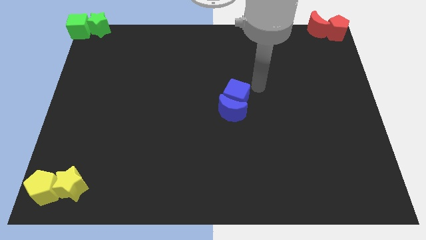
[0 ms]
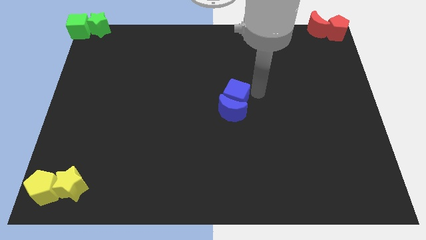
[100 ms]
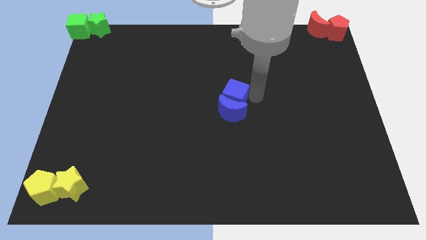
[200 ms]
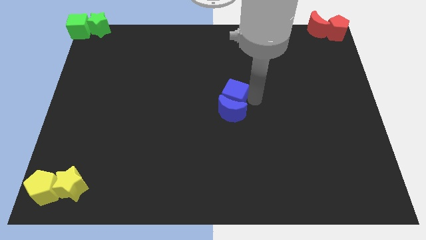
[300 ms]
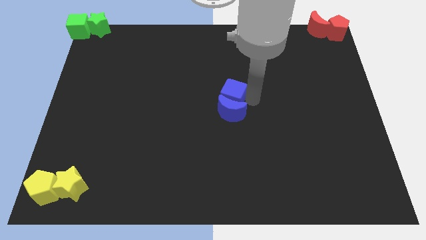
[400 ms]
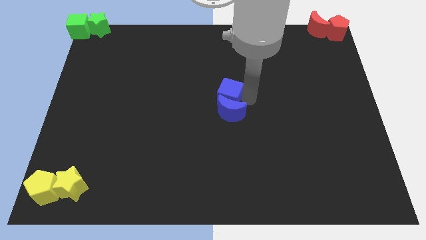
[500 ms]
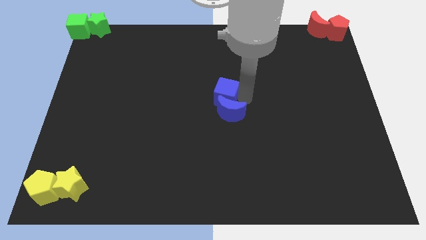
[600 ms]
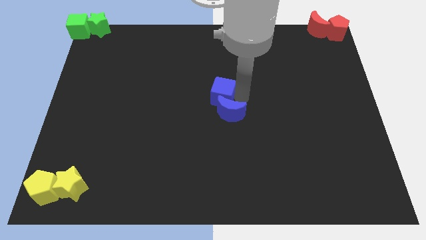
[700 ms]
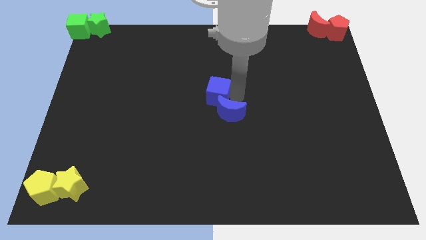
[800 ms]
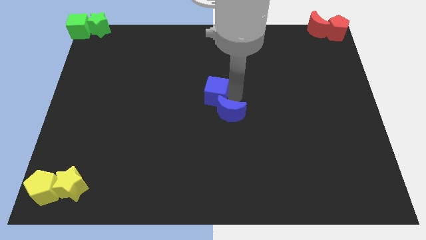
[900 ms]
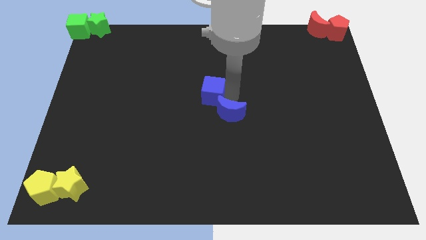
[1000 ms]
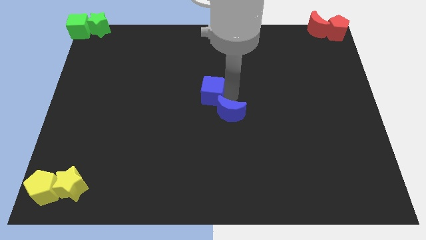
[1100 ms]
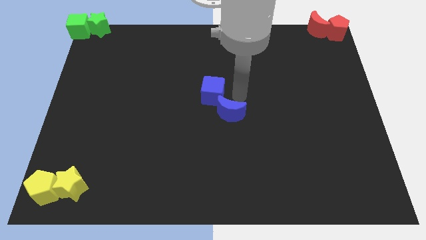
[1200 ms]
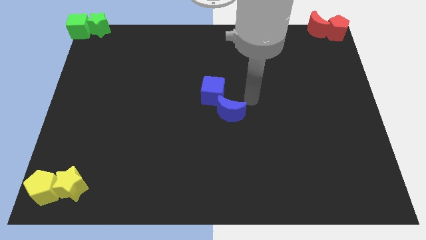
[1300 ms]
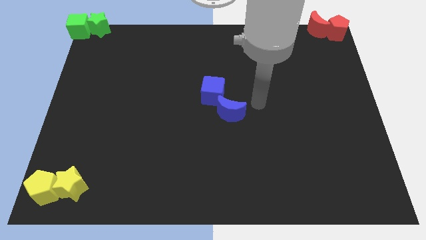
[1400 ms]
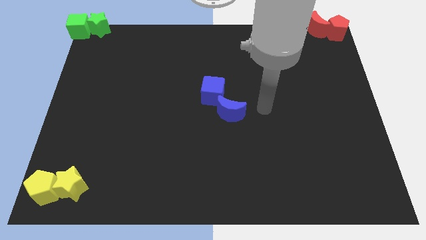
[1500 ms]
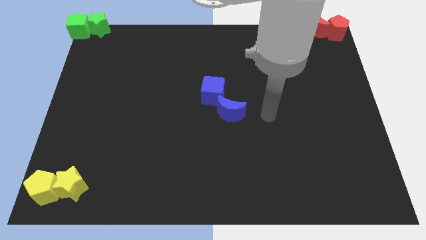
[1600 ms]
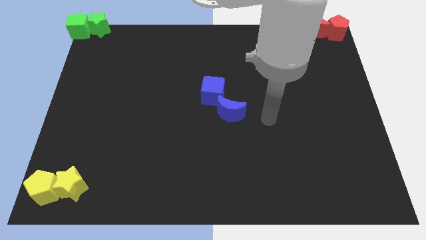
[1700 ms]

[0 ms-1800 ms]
place blue cube to the top left of the blue moon

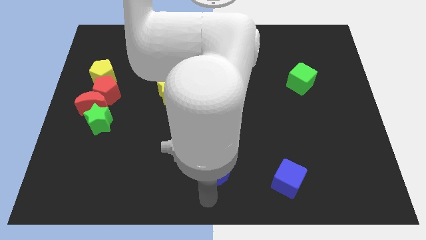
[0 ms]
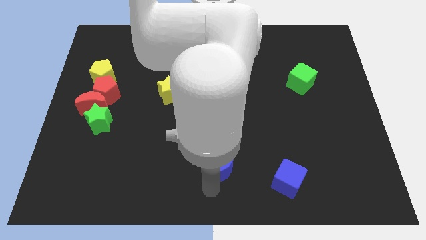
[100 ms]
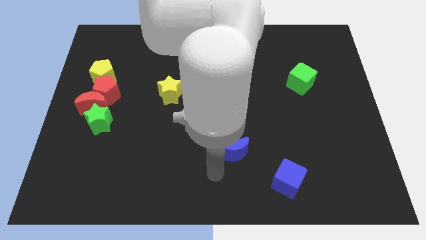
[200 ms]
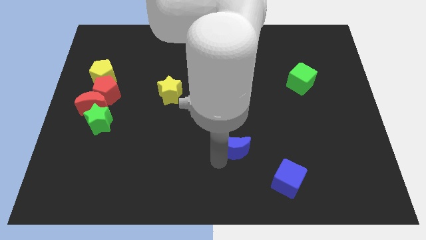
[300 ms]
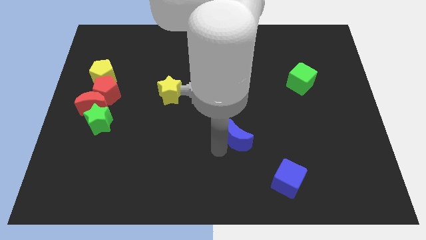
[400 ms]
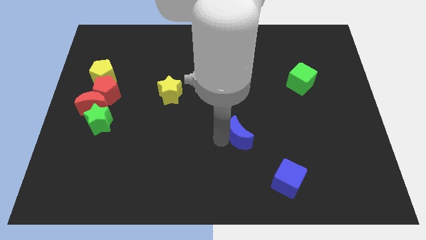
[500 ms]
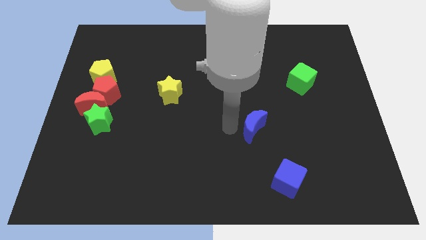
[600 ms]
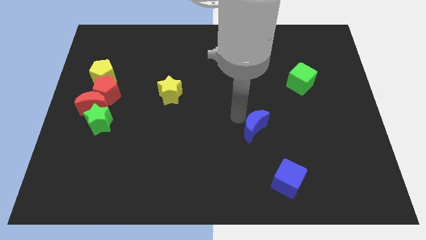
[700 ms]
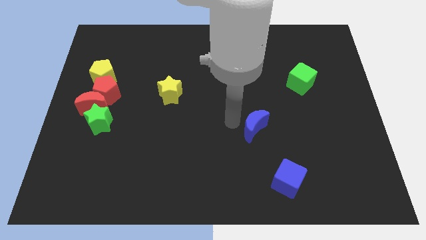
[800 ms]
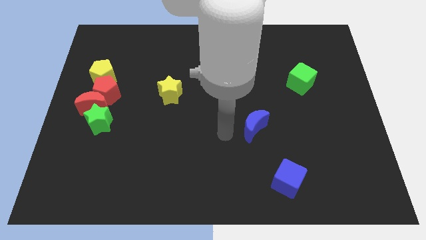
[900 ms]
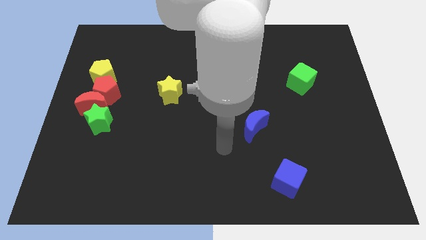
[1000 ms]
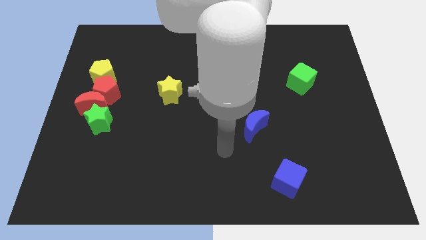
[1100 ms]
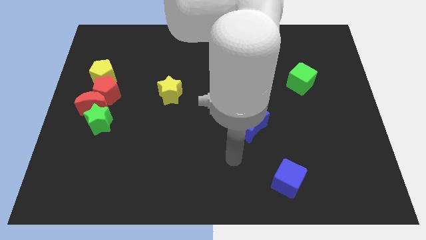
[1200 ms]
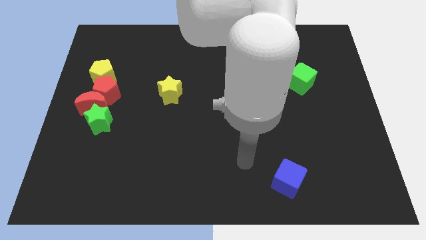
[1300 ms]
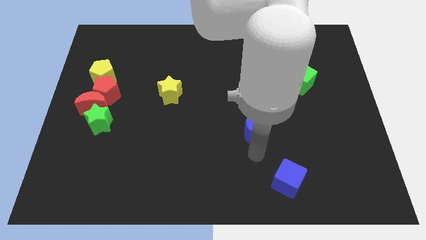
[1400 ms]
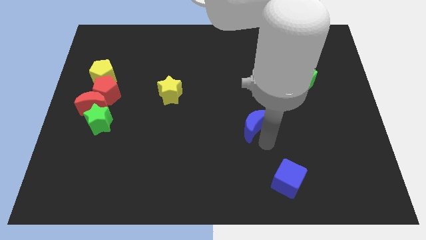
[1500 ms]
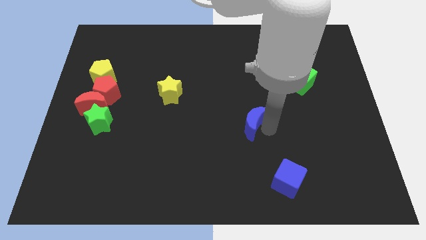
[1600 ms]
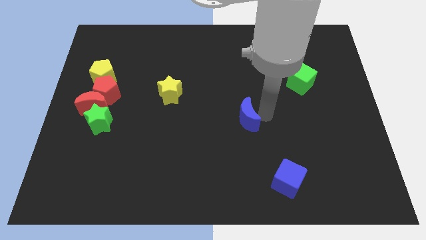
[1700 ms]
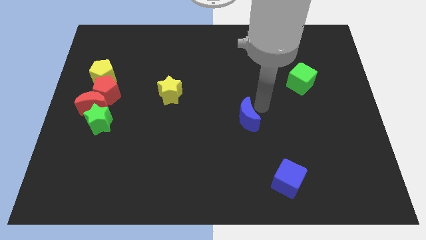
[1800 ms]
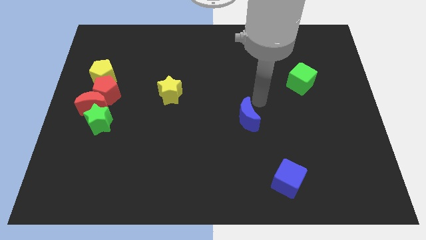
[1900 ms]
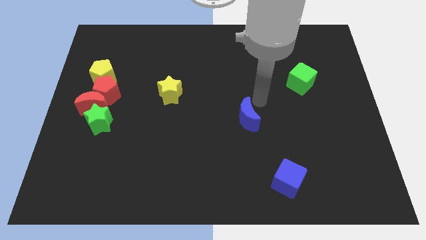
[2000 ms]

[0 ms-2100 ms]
move blue crescent left below the green cube

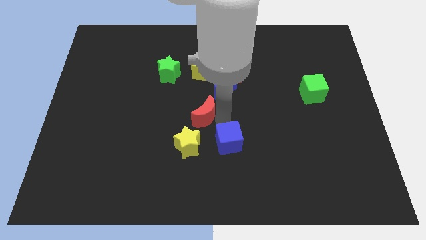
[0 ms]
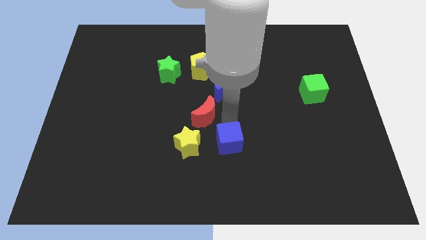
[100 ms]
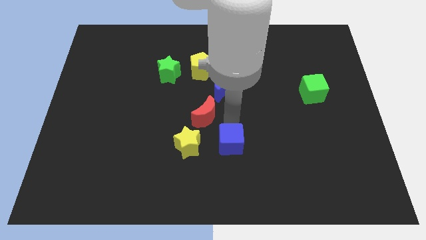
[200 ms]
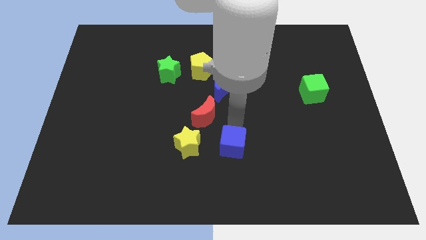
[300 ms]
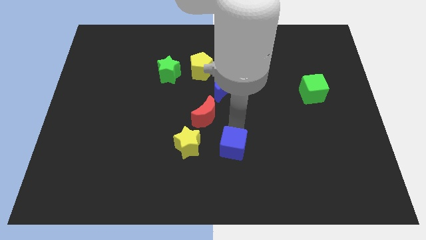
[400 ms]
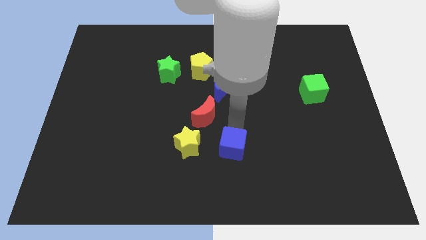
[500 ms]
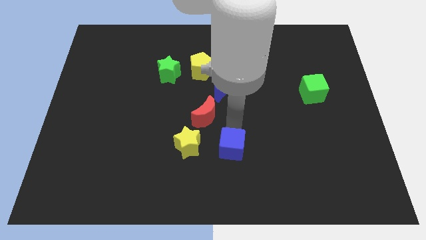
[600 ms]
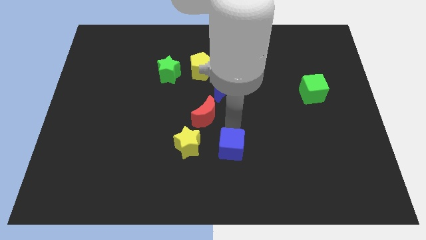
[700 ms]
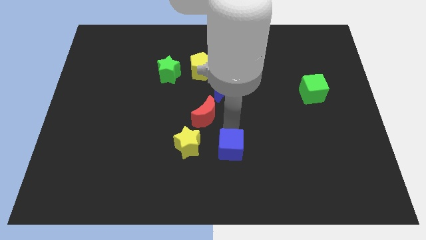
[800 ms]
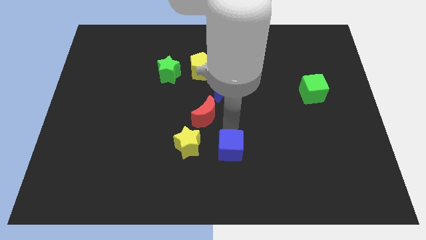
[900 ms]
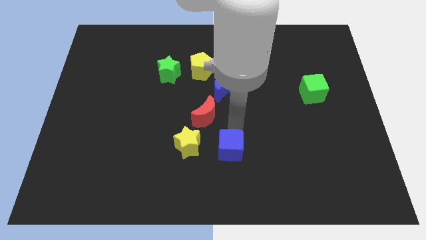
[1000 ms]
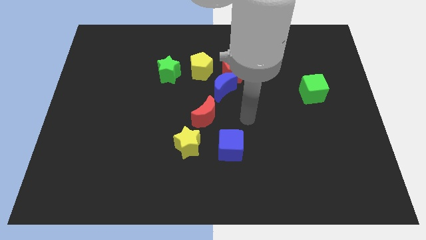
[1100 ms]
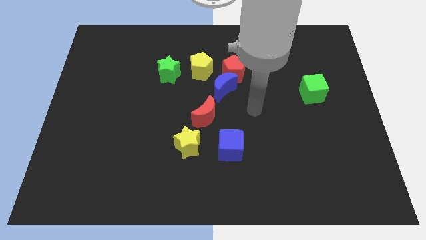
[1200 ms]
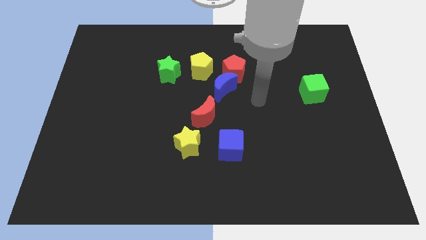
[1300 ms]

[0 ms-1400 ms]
move the blue cube down slightly

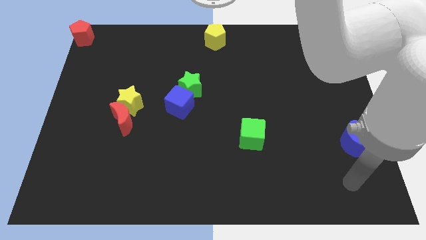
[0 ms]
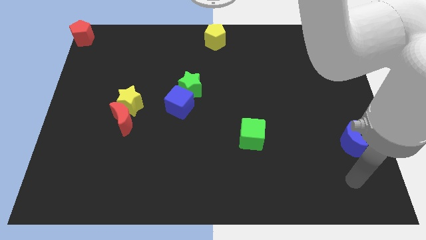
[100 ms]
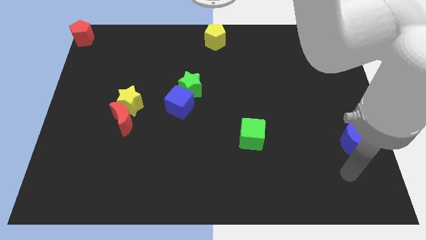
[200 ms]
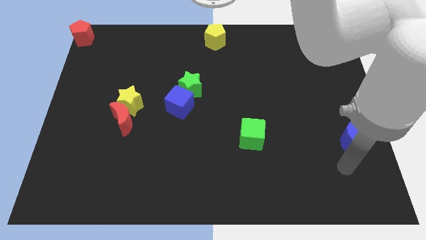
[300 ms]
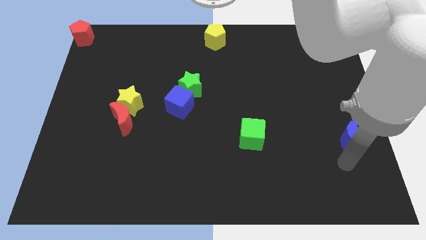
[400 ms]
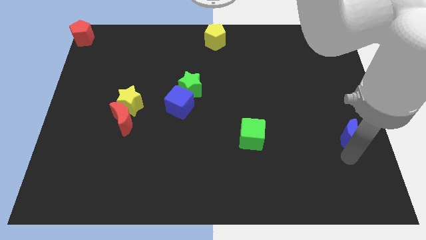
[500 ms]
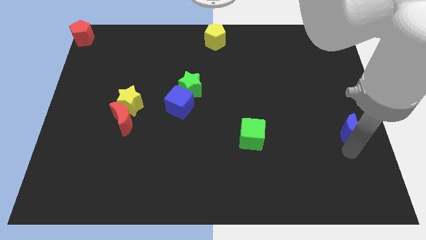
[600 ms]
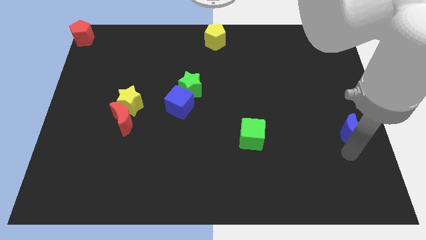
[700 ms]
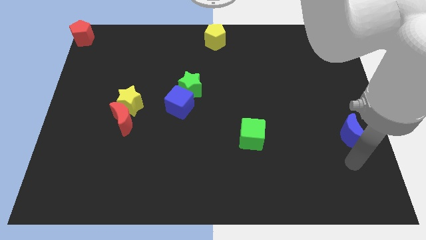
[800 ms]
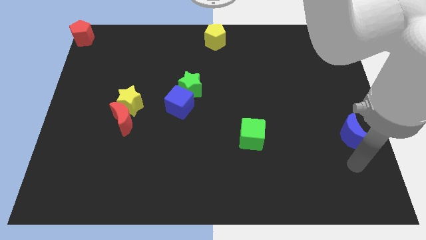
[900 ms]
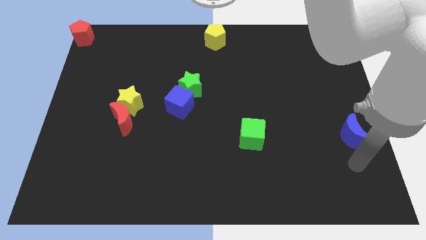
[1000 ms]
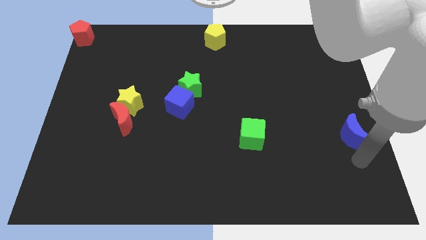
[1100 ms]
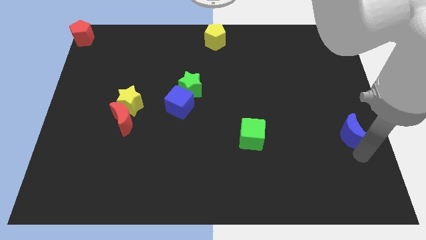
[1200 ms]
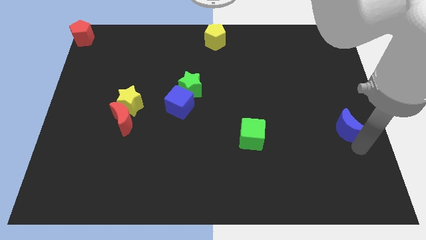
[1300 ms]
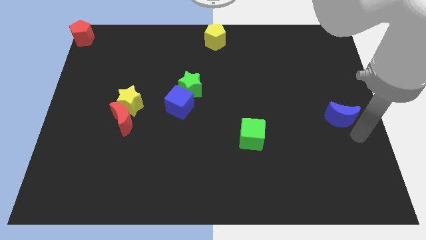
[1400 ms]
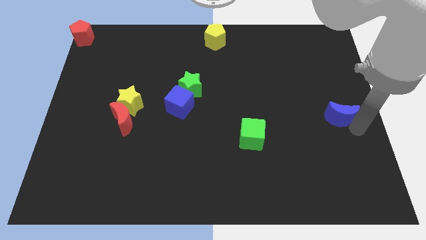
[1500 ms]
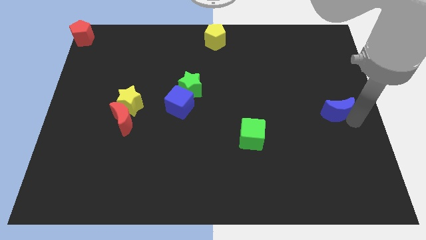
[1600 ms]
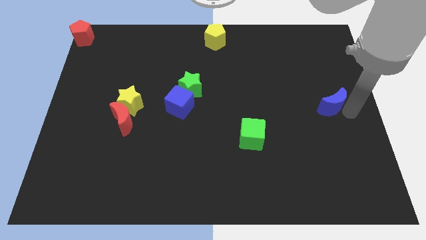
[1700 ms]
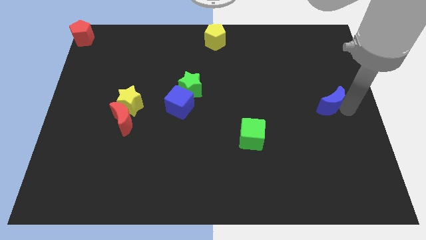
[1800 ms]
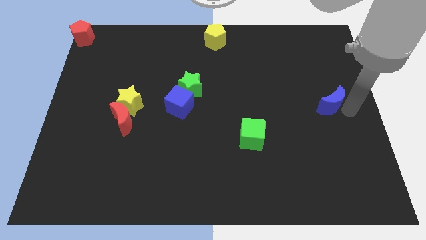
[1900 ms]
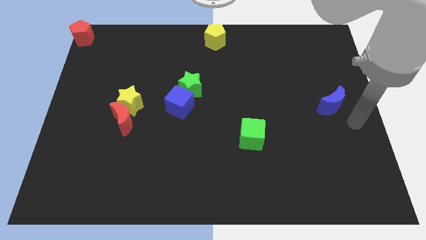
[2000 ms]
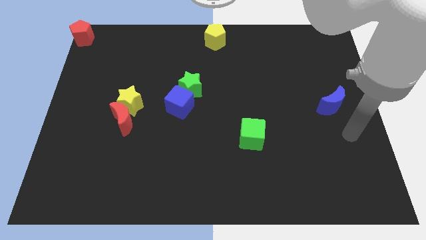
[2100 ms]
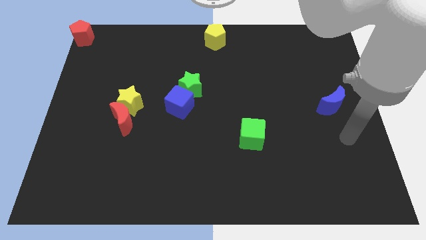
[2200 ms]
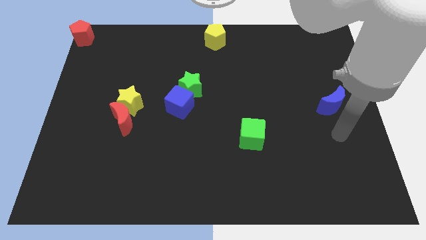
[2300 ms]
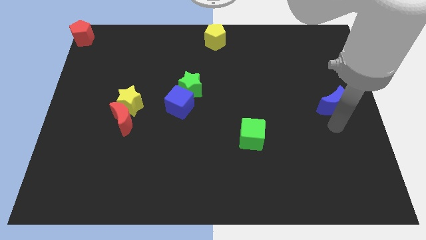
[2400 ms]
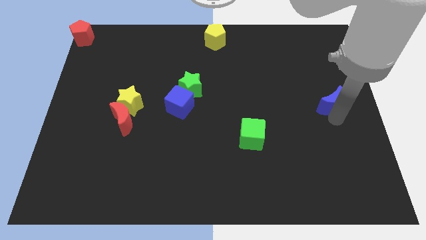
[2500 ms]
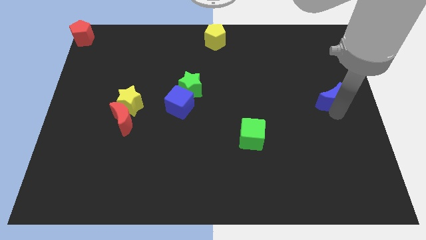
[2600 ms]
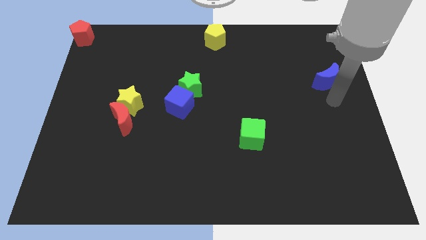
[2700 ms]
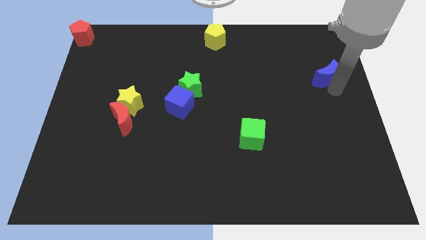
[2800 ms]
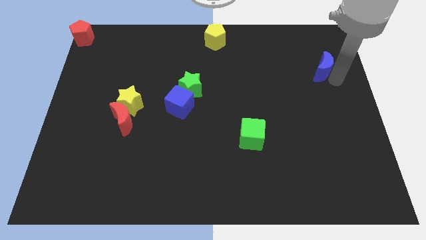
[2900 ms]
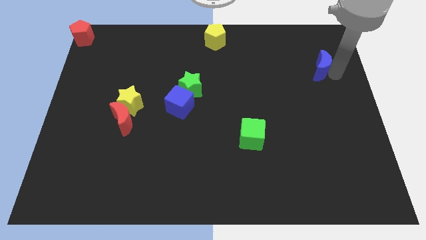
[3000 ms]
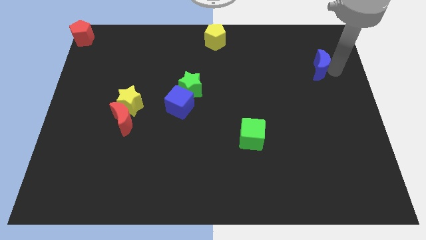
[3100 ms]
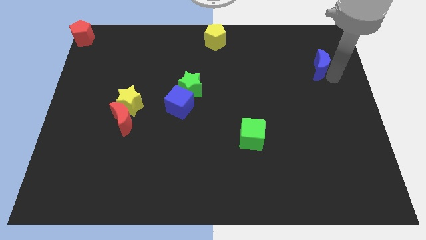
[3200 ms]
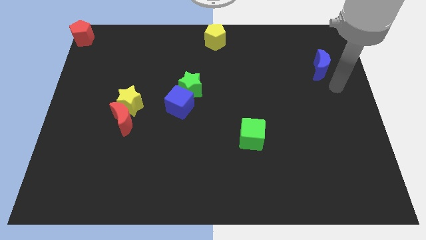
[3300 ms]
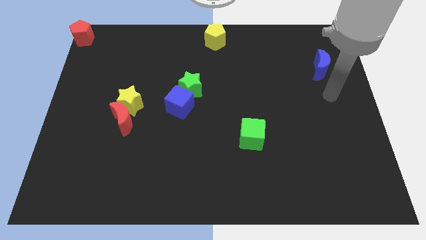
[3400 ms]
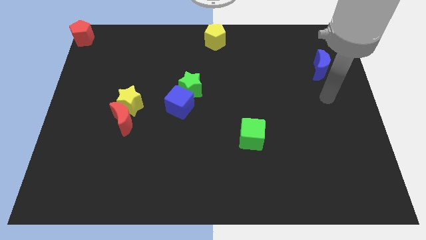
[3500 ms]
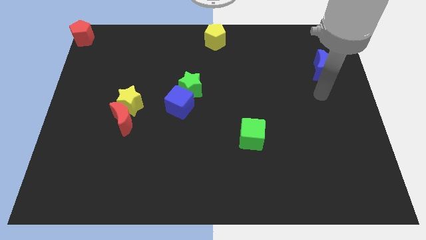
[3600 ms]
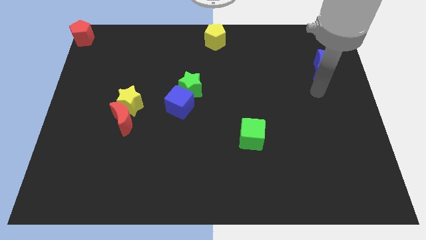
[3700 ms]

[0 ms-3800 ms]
place the blue crescent diagonal to the green cube
